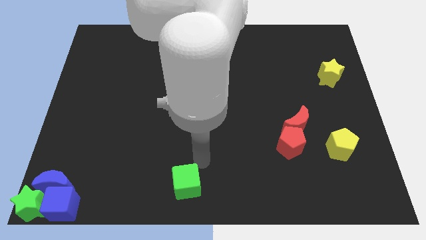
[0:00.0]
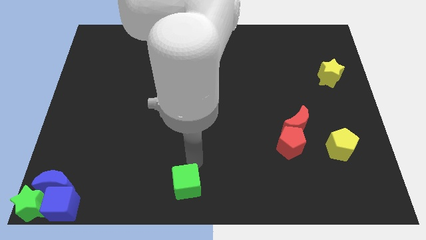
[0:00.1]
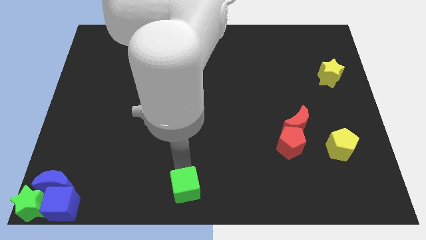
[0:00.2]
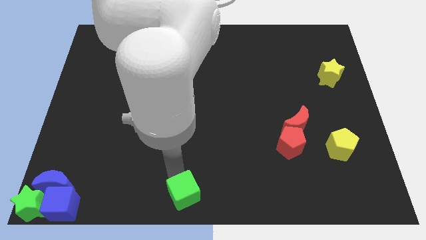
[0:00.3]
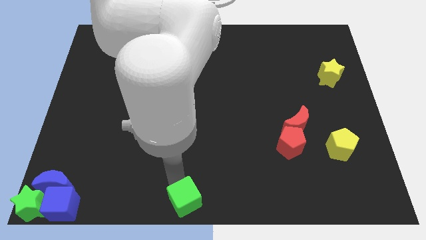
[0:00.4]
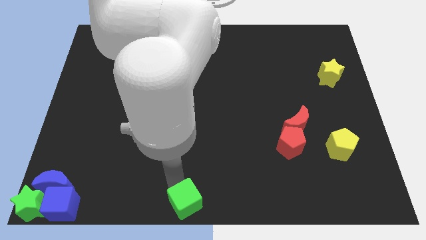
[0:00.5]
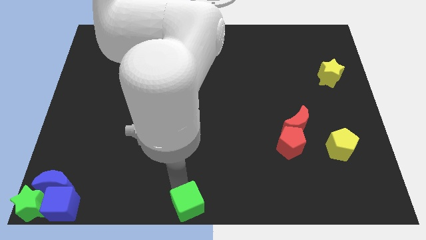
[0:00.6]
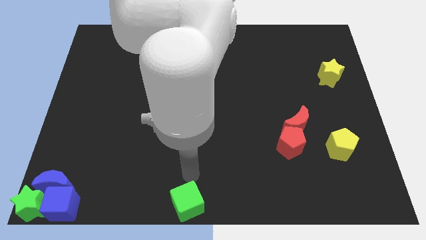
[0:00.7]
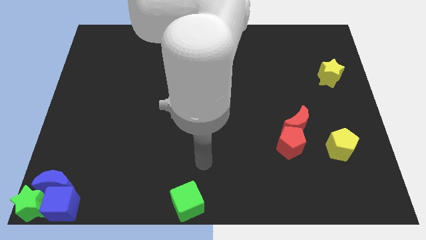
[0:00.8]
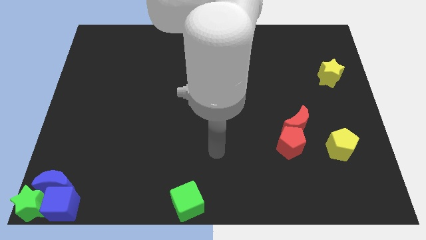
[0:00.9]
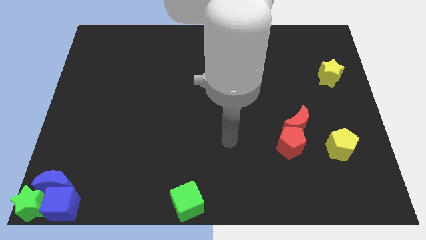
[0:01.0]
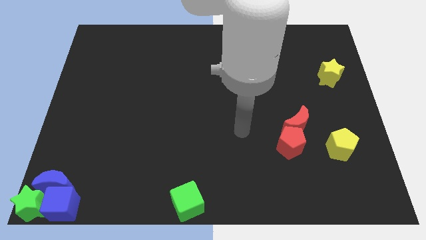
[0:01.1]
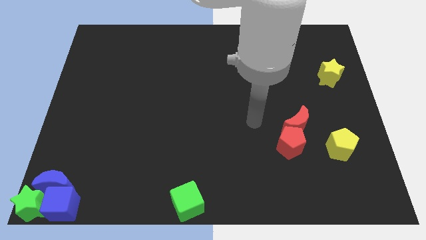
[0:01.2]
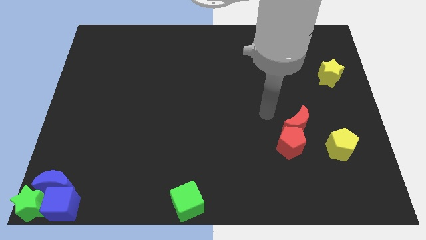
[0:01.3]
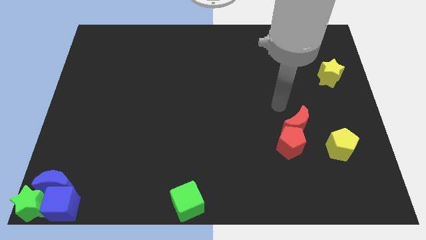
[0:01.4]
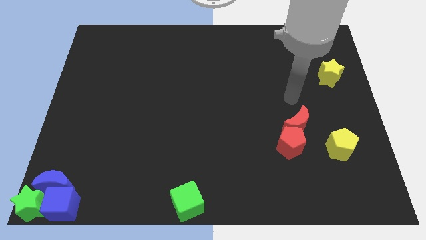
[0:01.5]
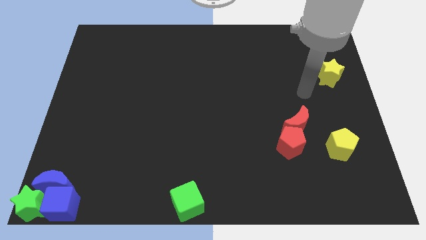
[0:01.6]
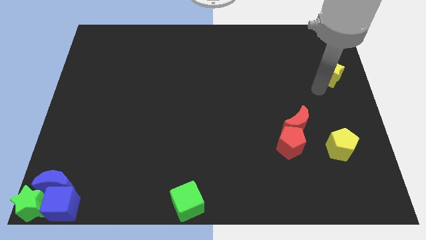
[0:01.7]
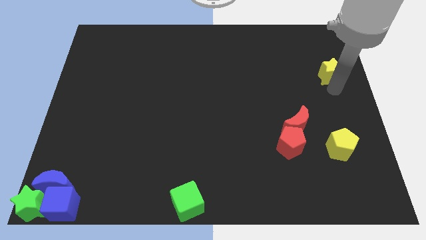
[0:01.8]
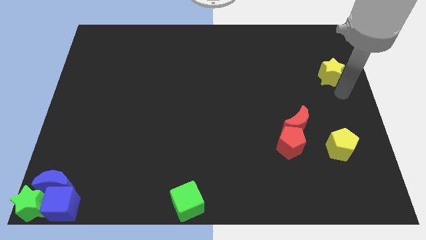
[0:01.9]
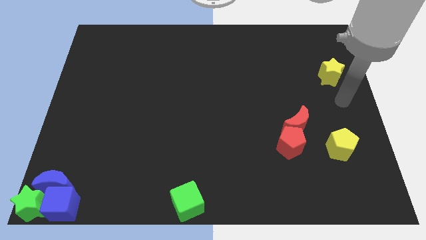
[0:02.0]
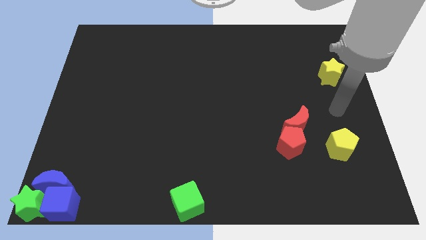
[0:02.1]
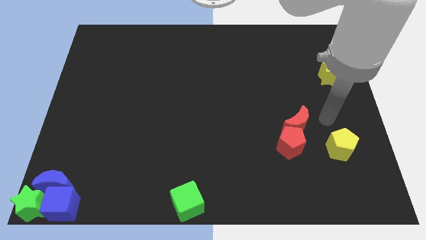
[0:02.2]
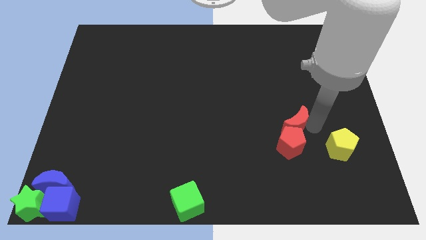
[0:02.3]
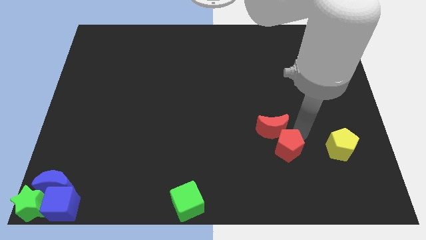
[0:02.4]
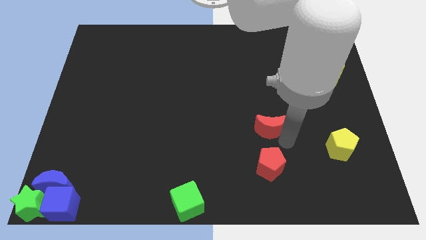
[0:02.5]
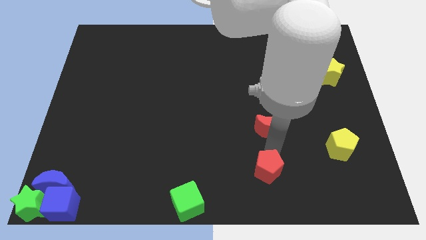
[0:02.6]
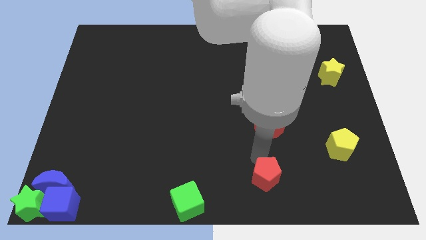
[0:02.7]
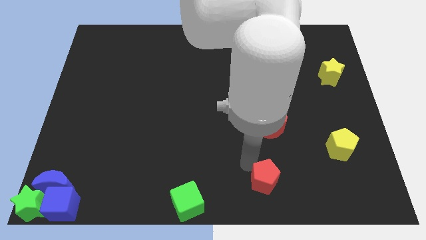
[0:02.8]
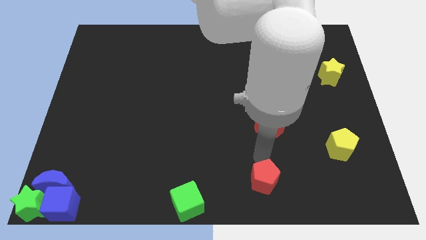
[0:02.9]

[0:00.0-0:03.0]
separate the red blocks

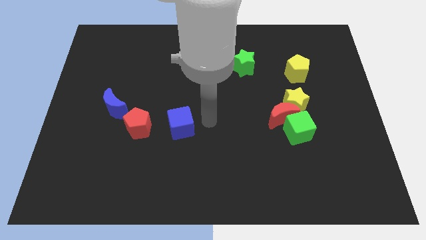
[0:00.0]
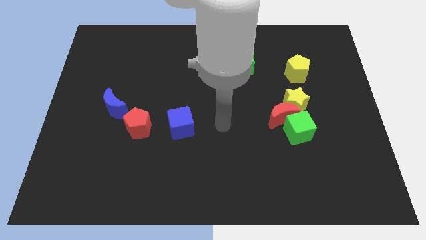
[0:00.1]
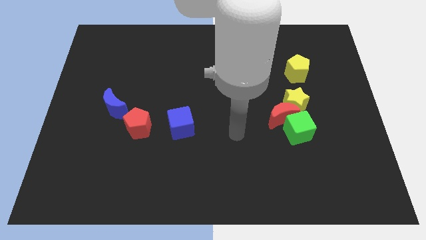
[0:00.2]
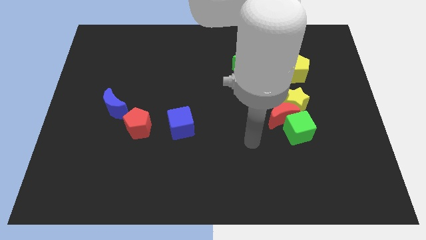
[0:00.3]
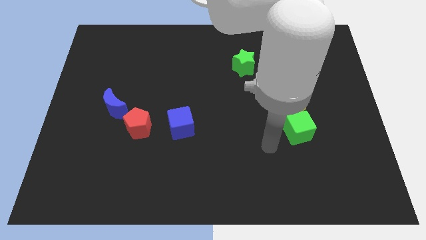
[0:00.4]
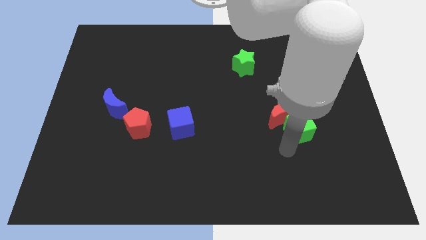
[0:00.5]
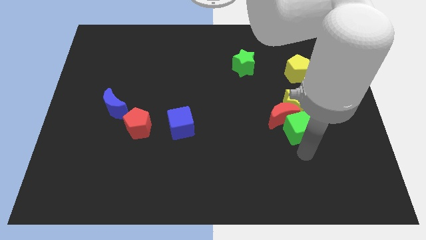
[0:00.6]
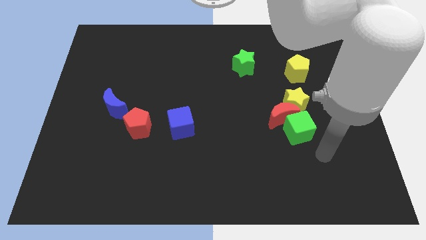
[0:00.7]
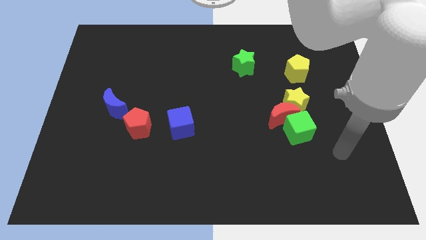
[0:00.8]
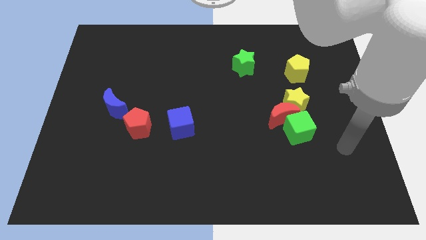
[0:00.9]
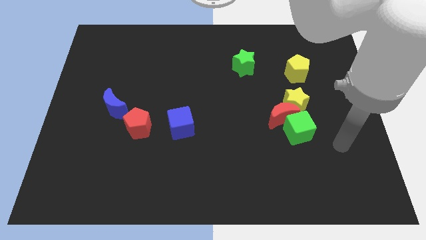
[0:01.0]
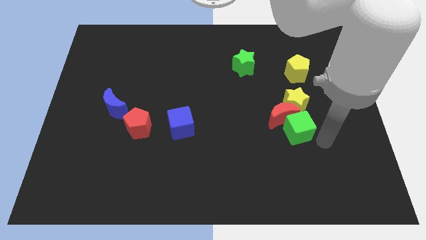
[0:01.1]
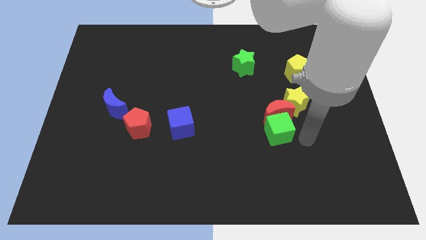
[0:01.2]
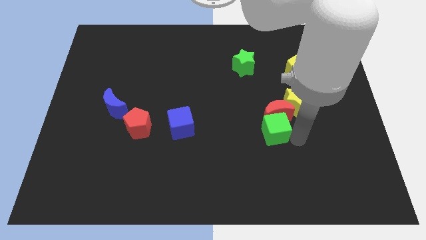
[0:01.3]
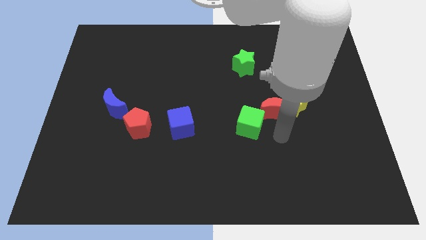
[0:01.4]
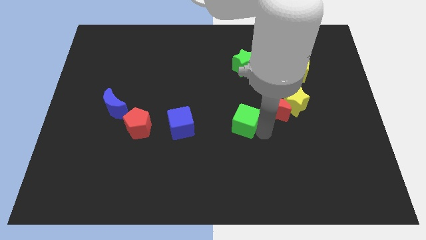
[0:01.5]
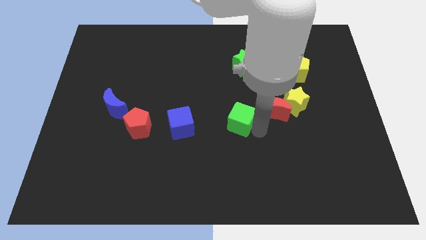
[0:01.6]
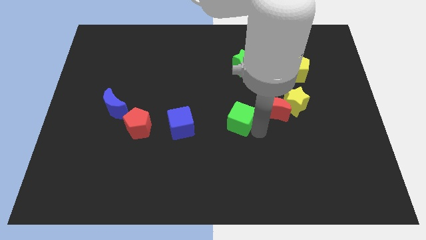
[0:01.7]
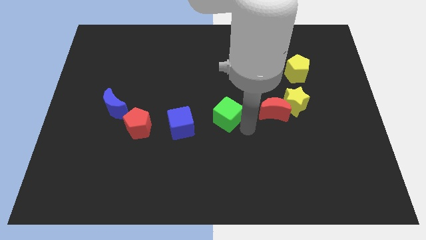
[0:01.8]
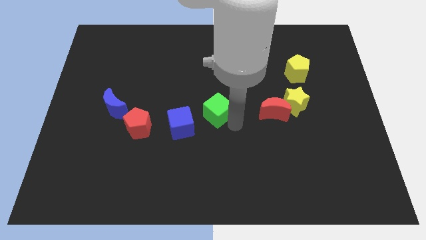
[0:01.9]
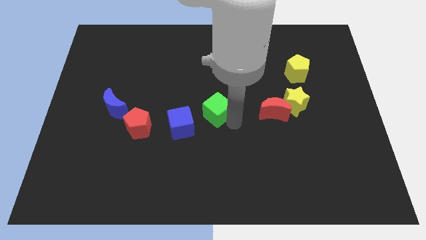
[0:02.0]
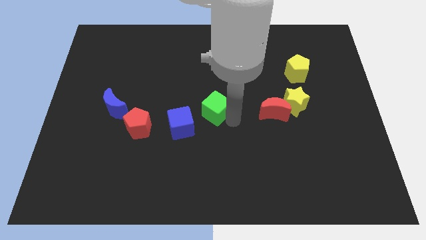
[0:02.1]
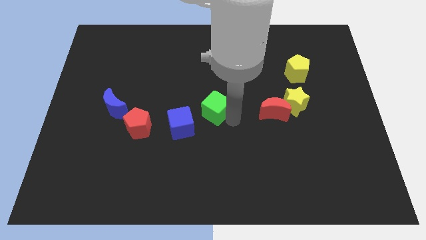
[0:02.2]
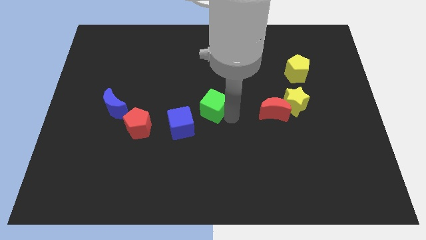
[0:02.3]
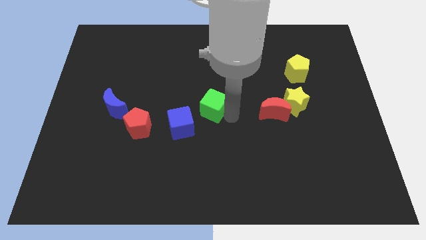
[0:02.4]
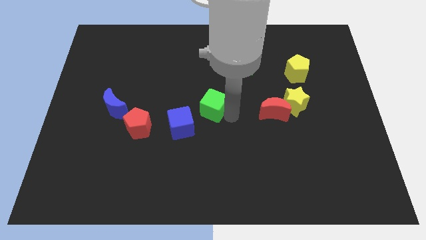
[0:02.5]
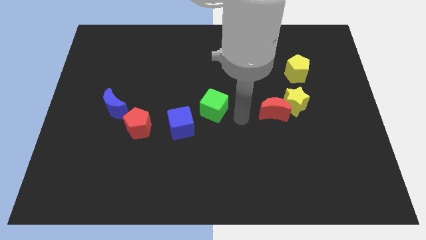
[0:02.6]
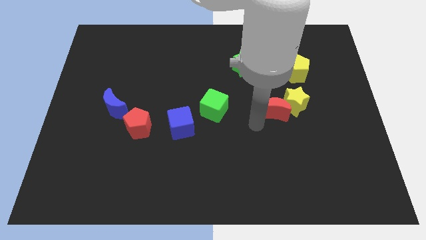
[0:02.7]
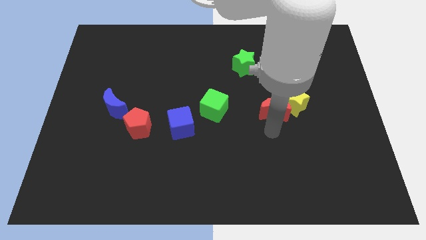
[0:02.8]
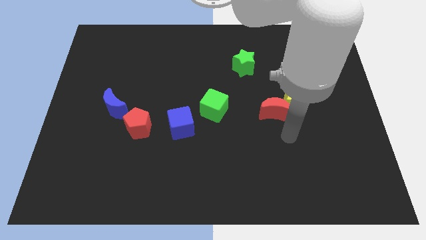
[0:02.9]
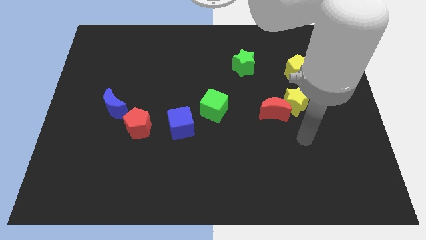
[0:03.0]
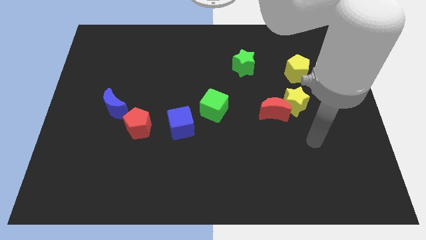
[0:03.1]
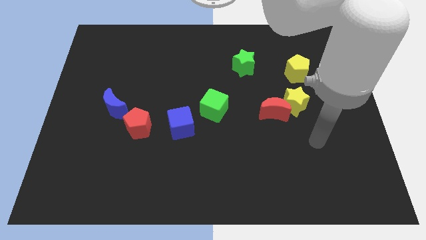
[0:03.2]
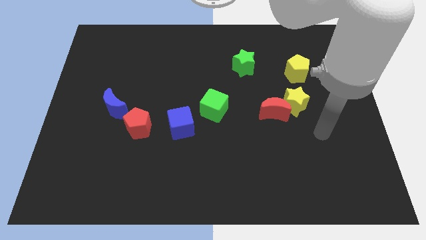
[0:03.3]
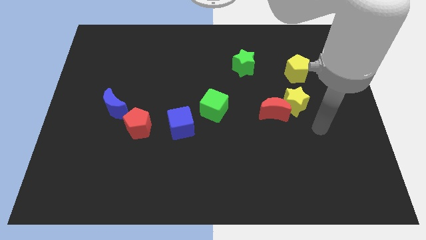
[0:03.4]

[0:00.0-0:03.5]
push the green cube towards blue cube

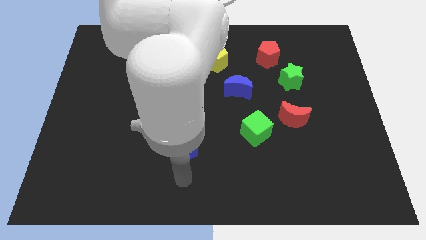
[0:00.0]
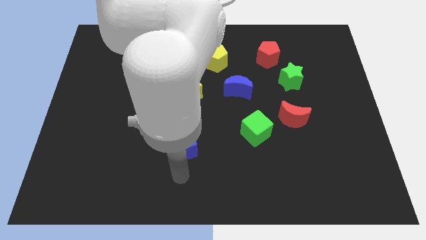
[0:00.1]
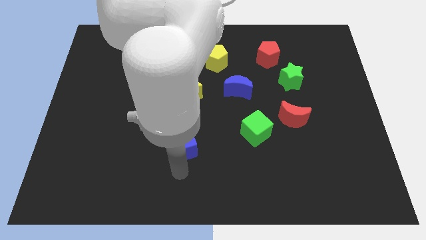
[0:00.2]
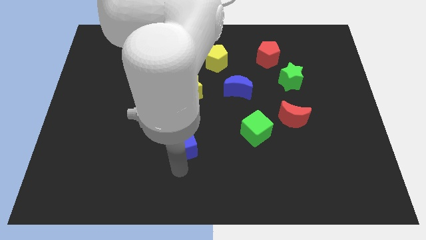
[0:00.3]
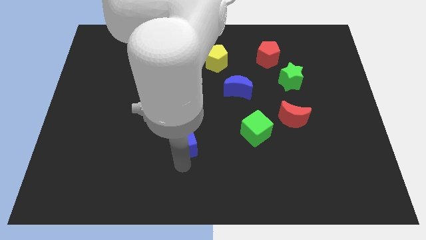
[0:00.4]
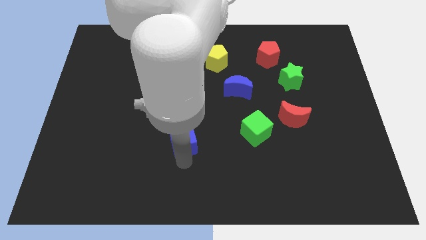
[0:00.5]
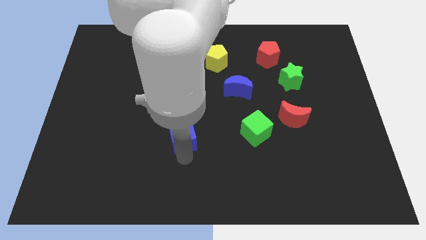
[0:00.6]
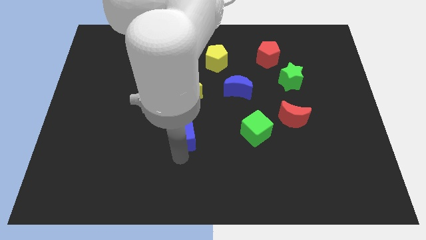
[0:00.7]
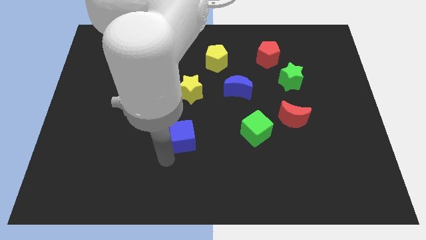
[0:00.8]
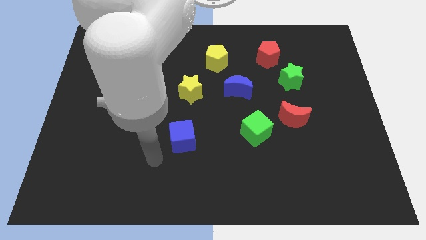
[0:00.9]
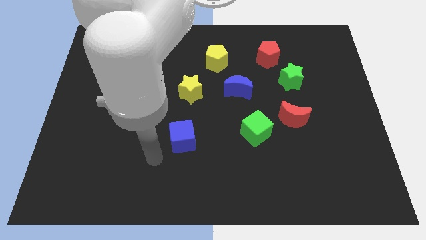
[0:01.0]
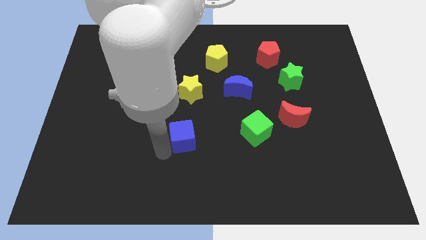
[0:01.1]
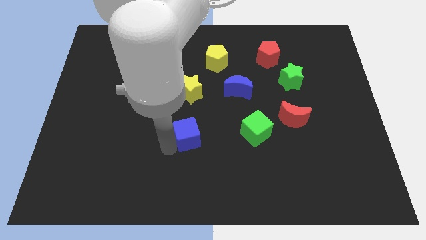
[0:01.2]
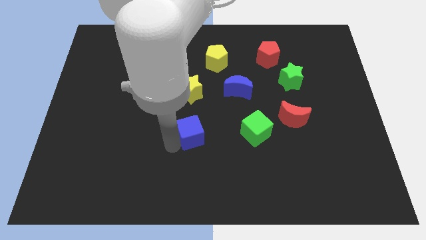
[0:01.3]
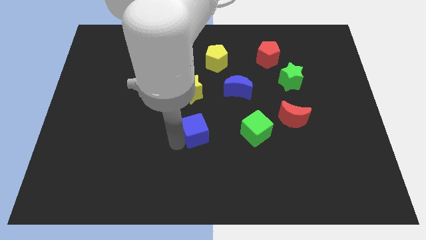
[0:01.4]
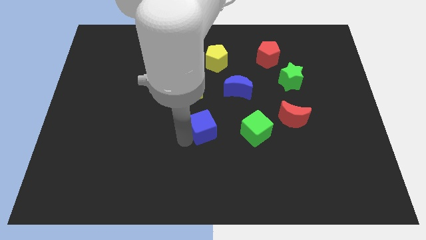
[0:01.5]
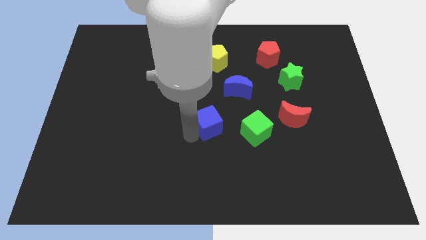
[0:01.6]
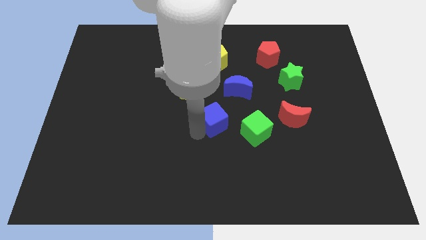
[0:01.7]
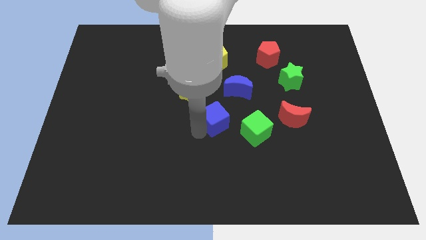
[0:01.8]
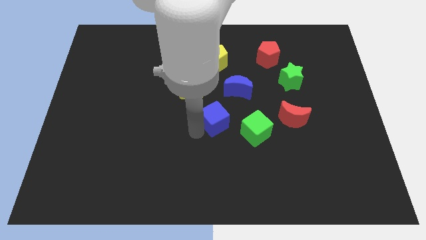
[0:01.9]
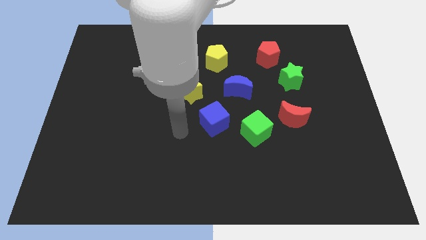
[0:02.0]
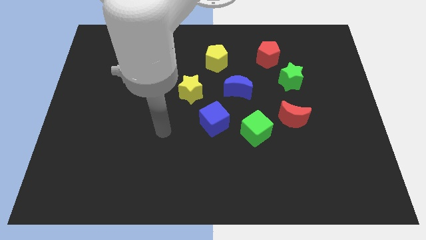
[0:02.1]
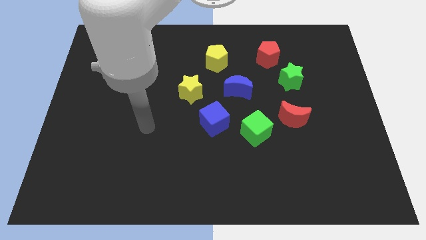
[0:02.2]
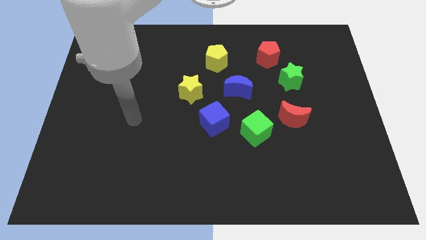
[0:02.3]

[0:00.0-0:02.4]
move the blue cube in between the yellow star and green cube

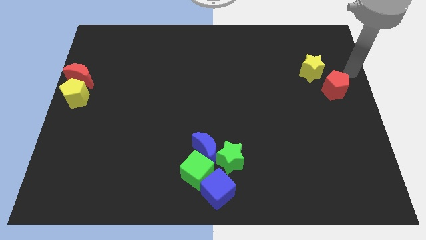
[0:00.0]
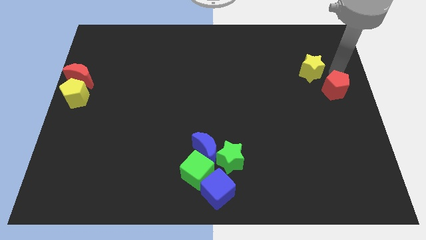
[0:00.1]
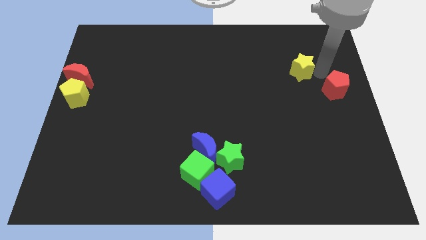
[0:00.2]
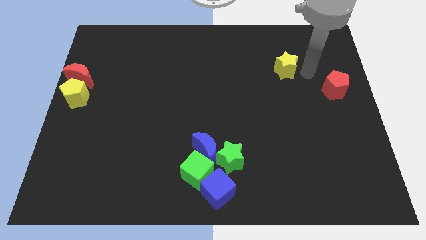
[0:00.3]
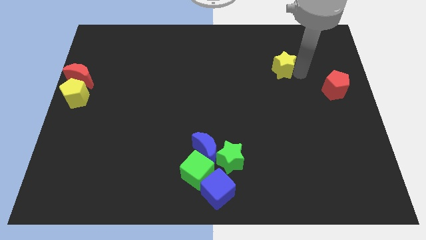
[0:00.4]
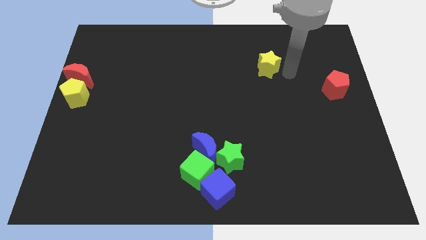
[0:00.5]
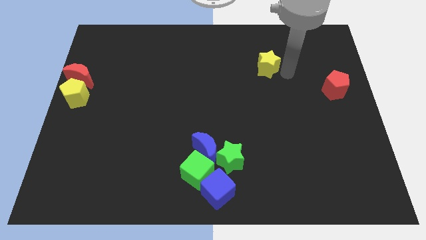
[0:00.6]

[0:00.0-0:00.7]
push the yellow star away from the red pentagon
